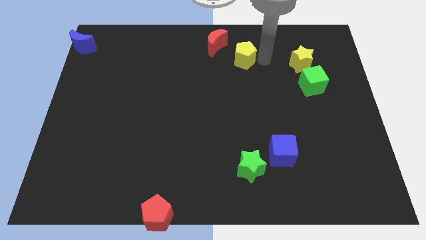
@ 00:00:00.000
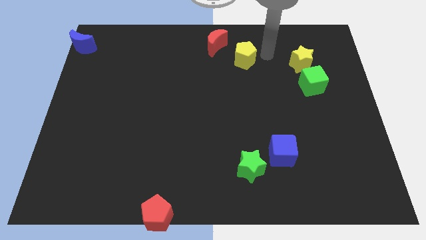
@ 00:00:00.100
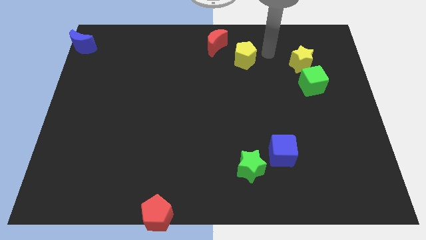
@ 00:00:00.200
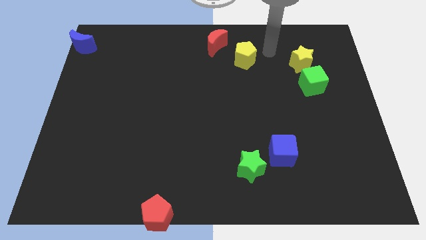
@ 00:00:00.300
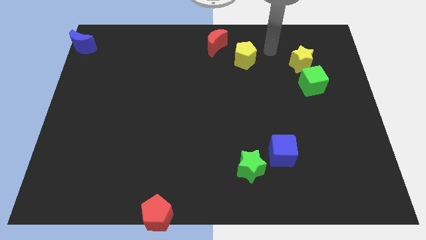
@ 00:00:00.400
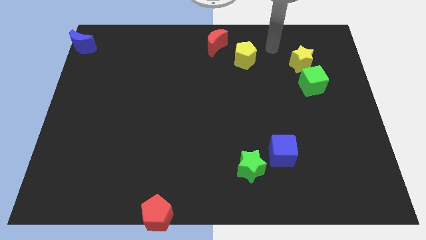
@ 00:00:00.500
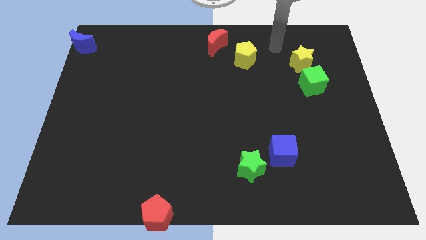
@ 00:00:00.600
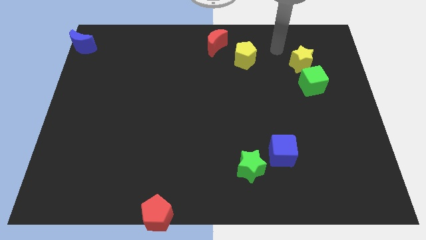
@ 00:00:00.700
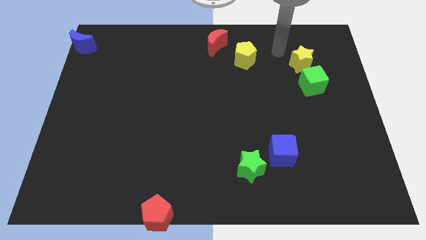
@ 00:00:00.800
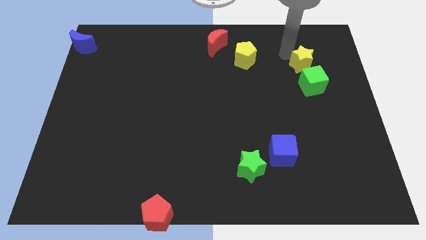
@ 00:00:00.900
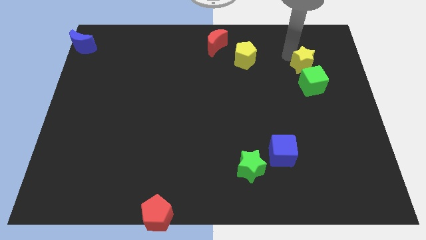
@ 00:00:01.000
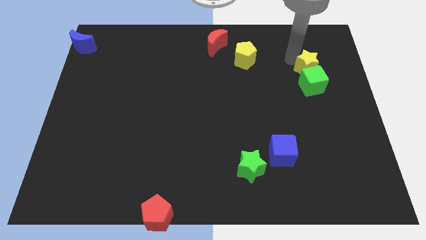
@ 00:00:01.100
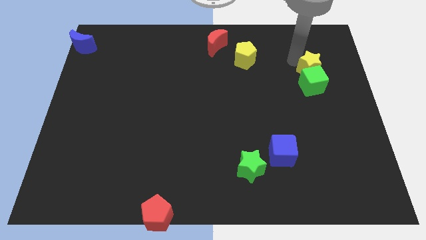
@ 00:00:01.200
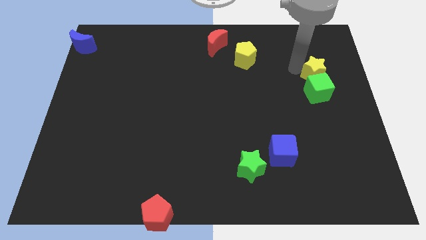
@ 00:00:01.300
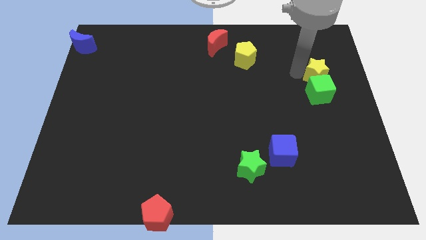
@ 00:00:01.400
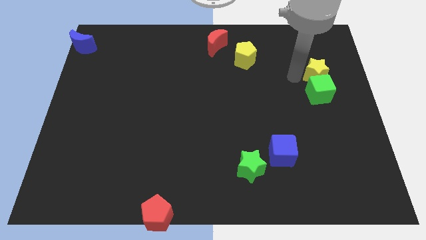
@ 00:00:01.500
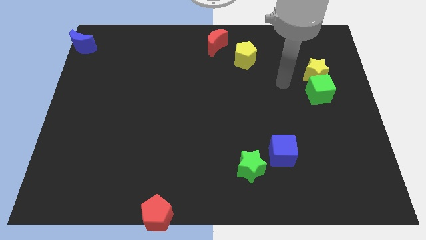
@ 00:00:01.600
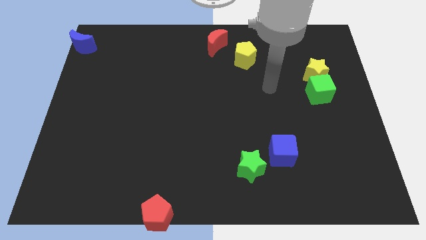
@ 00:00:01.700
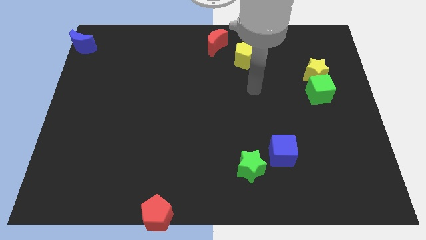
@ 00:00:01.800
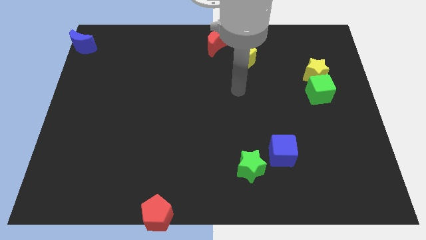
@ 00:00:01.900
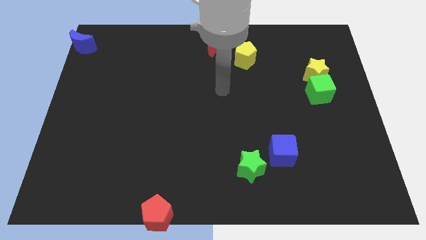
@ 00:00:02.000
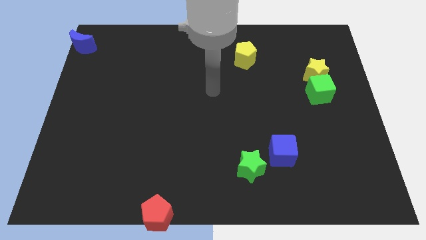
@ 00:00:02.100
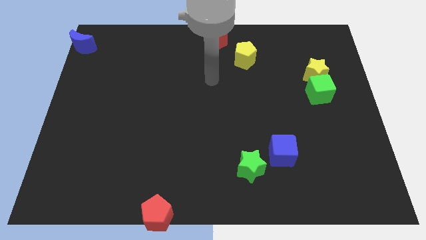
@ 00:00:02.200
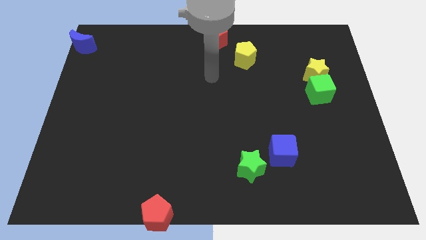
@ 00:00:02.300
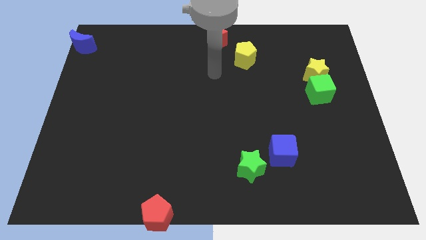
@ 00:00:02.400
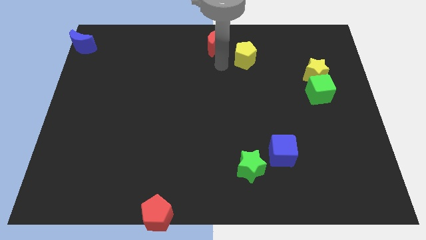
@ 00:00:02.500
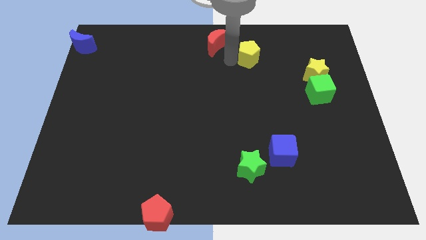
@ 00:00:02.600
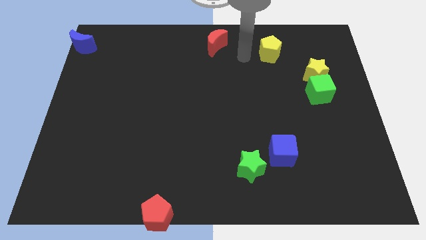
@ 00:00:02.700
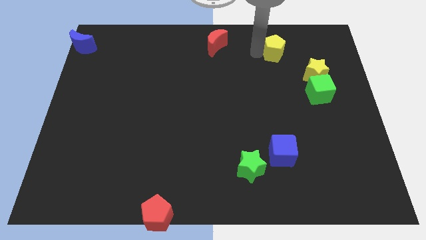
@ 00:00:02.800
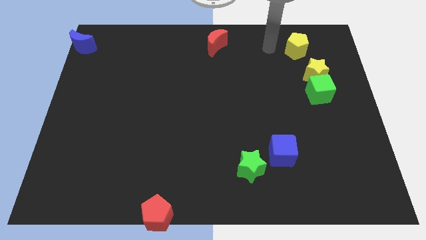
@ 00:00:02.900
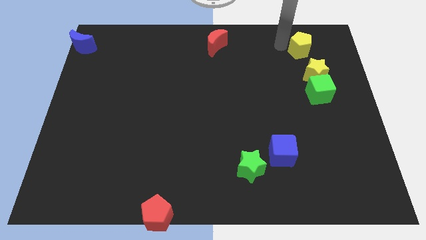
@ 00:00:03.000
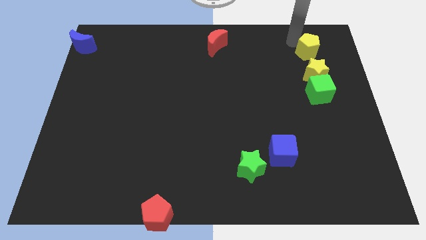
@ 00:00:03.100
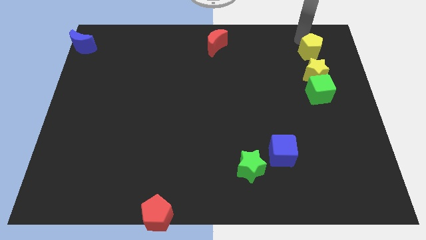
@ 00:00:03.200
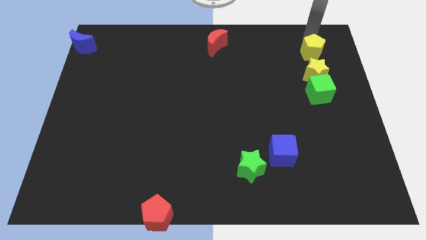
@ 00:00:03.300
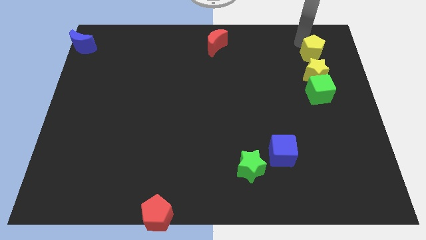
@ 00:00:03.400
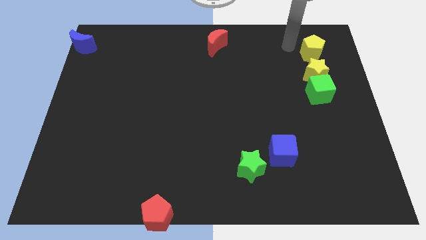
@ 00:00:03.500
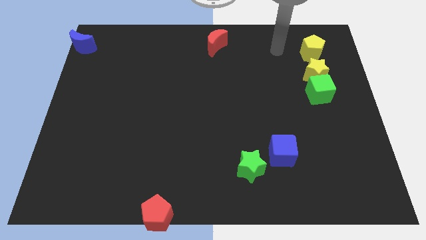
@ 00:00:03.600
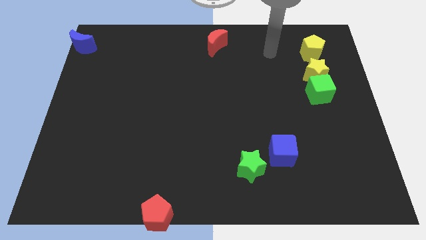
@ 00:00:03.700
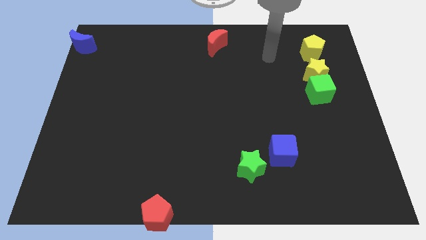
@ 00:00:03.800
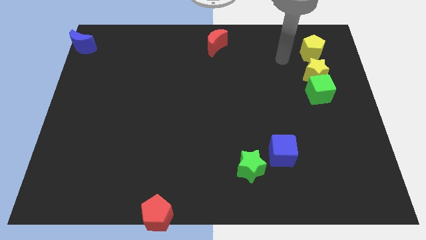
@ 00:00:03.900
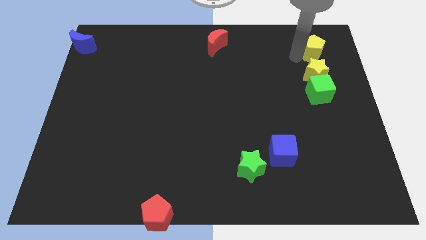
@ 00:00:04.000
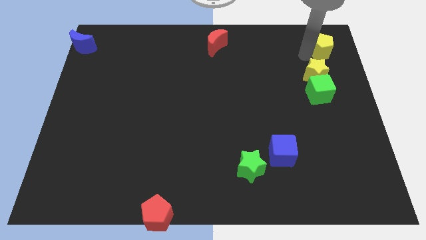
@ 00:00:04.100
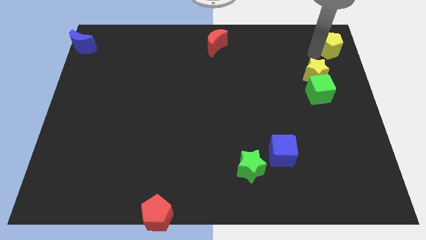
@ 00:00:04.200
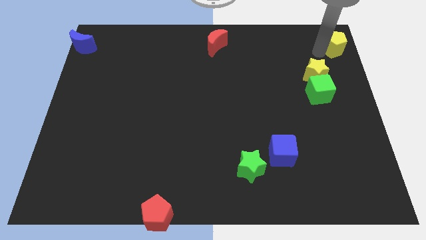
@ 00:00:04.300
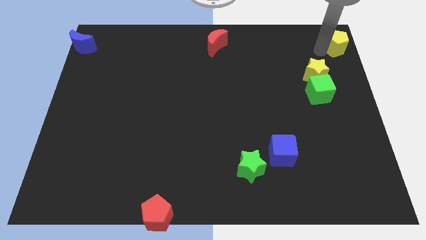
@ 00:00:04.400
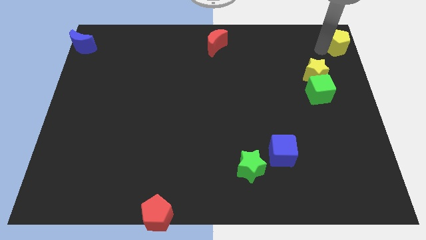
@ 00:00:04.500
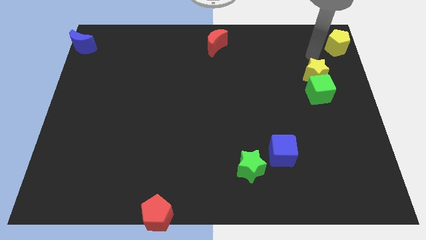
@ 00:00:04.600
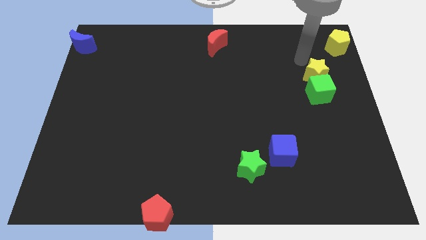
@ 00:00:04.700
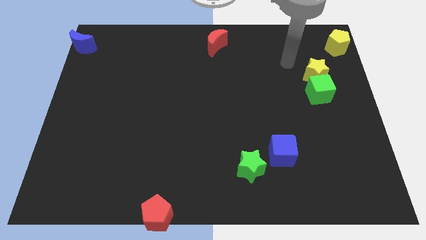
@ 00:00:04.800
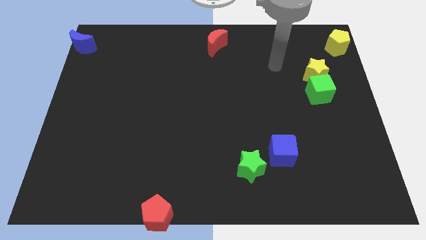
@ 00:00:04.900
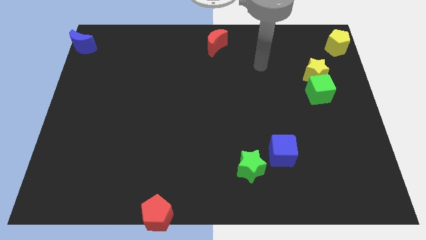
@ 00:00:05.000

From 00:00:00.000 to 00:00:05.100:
place the yellow pentagon to the top right corner of the board

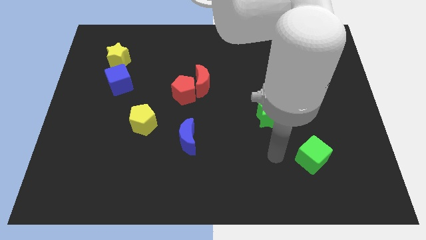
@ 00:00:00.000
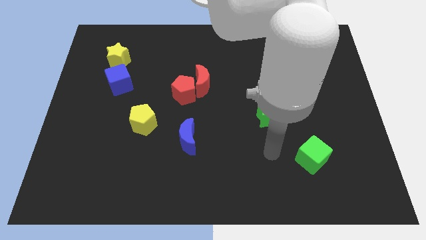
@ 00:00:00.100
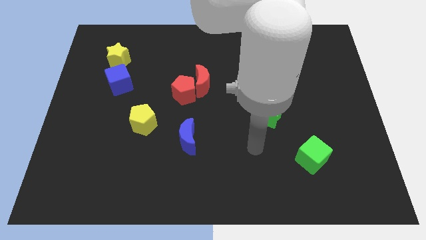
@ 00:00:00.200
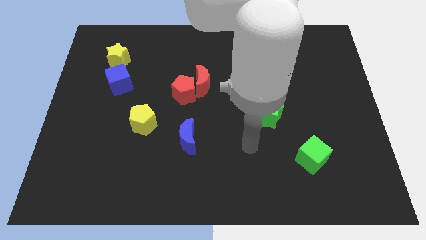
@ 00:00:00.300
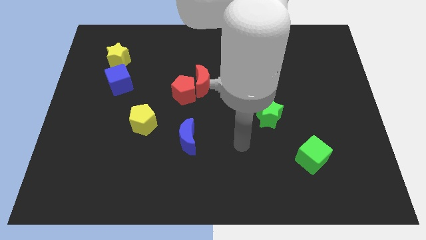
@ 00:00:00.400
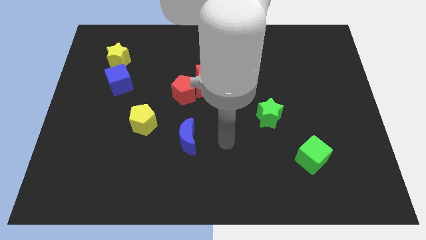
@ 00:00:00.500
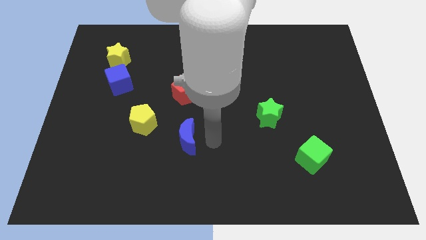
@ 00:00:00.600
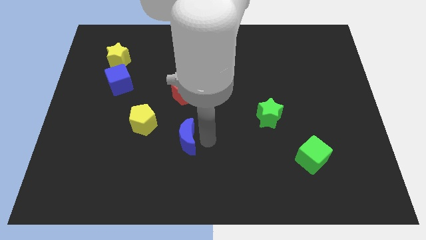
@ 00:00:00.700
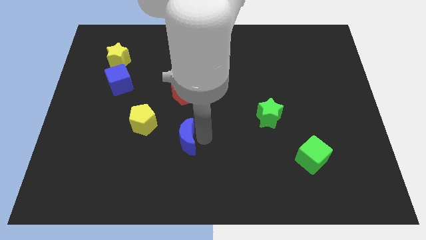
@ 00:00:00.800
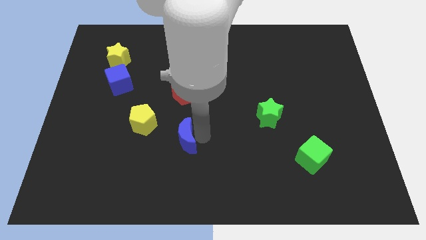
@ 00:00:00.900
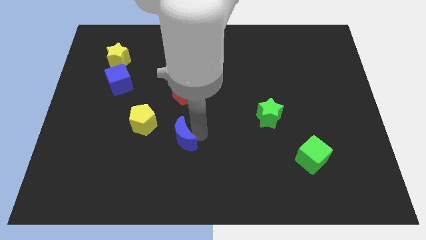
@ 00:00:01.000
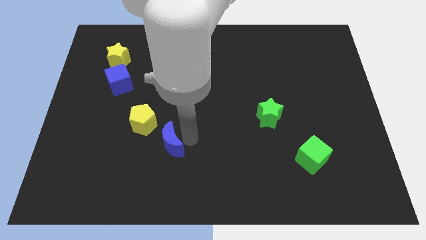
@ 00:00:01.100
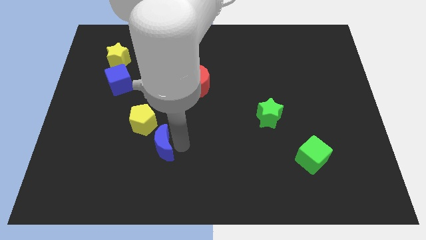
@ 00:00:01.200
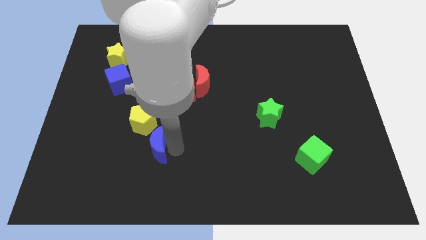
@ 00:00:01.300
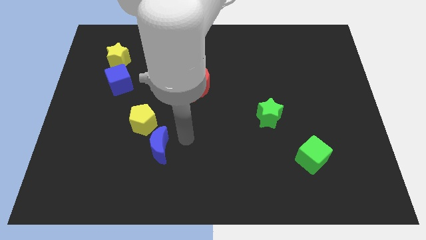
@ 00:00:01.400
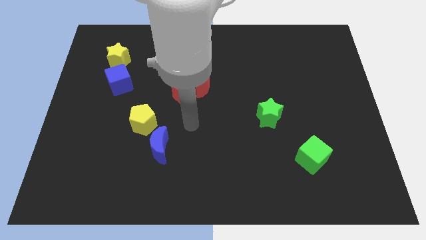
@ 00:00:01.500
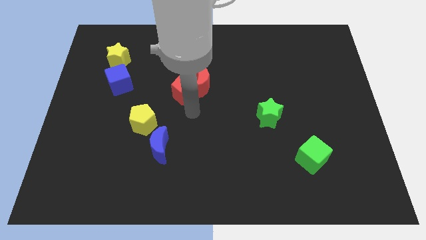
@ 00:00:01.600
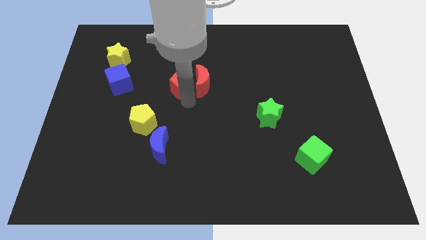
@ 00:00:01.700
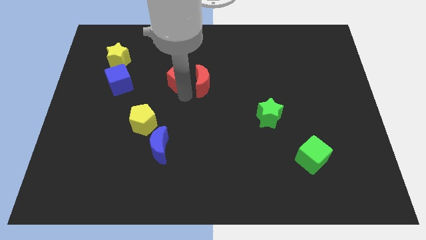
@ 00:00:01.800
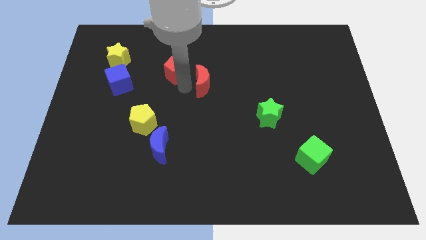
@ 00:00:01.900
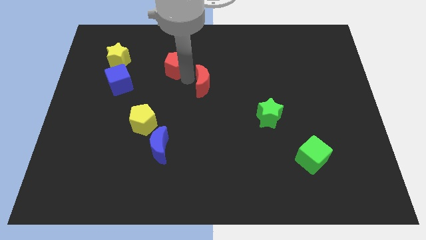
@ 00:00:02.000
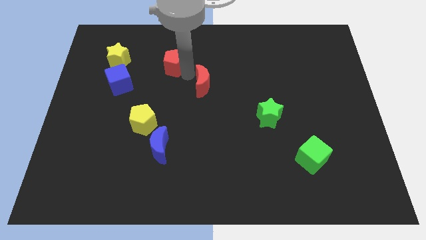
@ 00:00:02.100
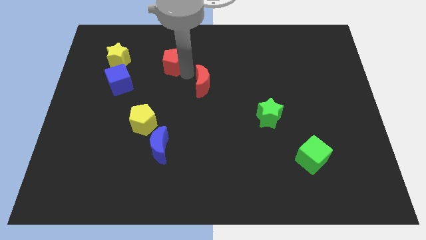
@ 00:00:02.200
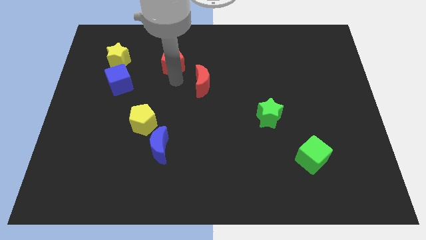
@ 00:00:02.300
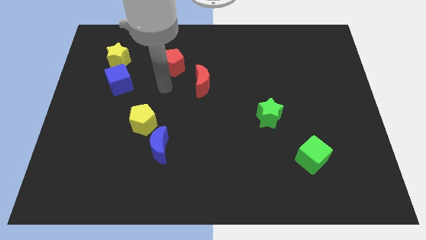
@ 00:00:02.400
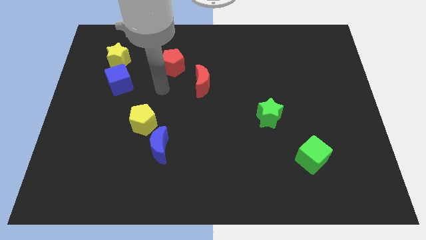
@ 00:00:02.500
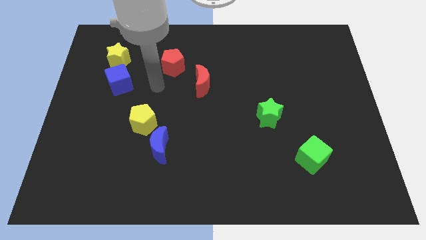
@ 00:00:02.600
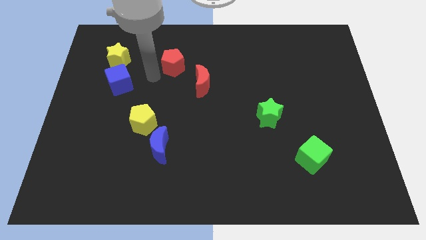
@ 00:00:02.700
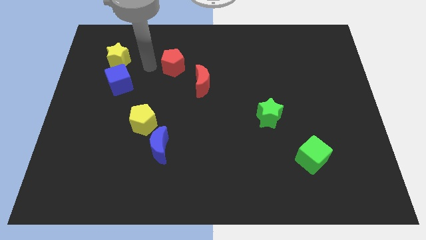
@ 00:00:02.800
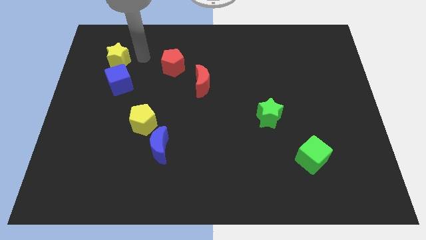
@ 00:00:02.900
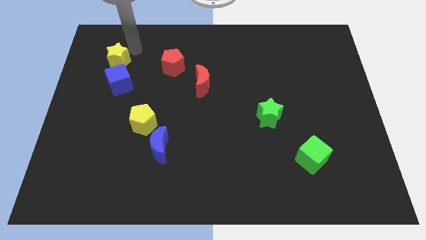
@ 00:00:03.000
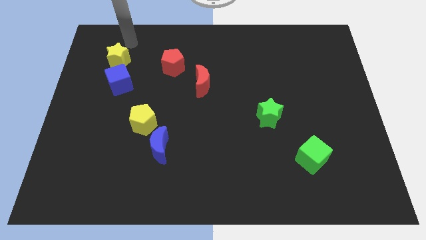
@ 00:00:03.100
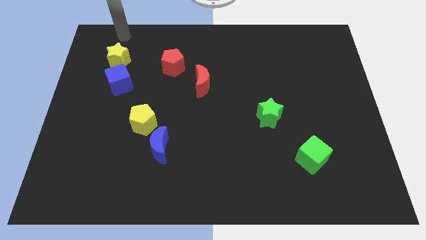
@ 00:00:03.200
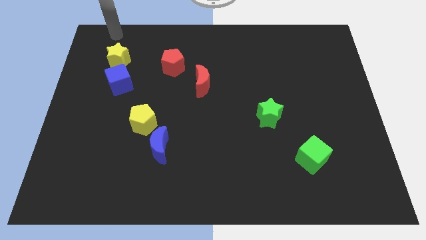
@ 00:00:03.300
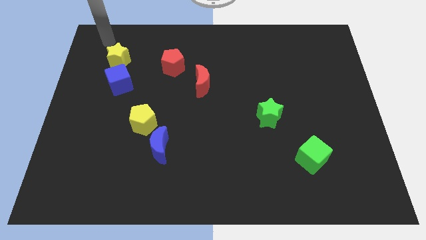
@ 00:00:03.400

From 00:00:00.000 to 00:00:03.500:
move the blue moon and red pentagon away from each other

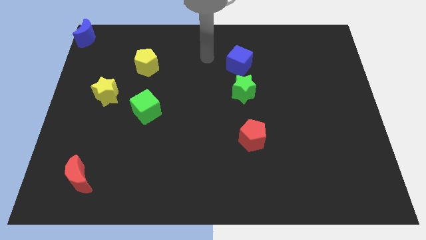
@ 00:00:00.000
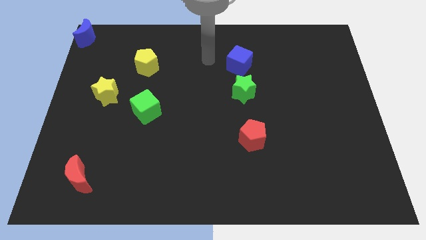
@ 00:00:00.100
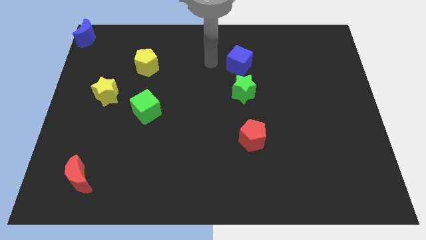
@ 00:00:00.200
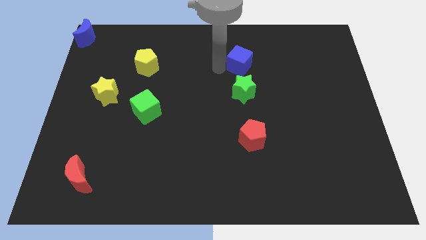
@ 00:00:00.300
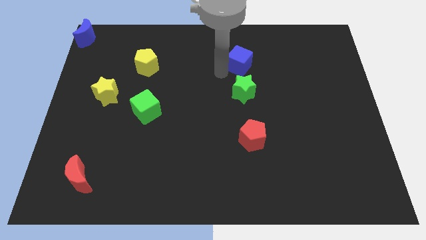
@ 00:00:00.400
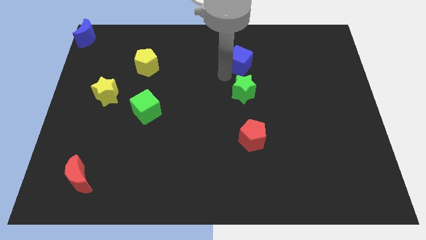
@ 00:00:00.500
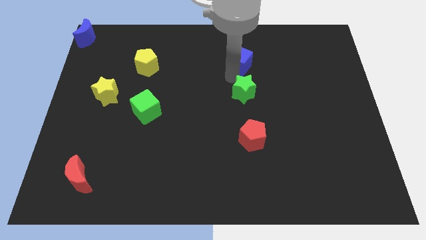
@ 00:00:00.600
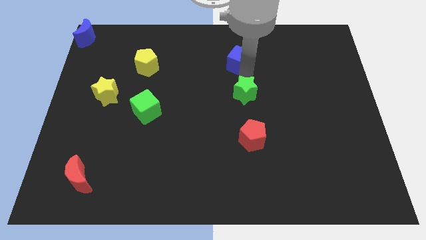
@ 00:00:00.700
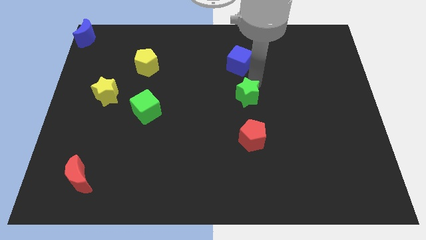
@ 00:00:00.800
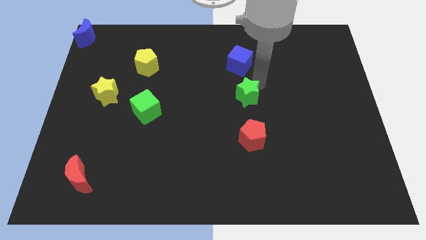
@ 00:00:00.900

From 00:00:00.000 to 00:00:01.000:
touch the green star at the top
